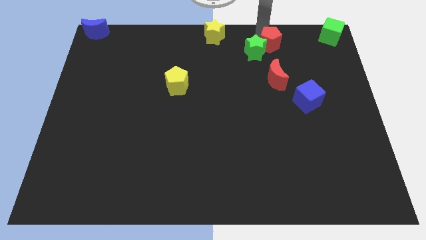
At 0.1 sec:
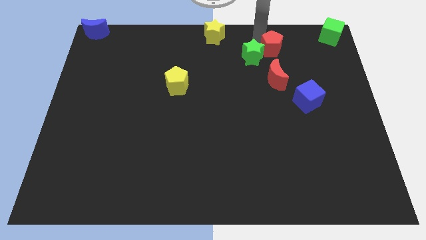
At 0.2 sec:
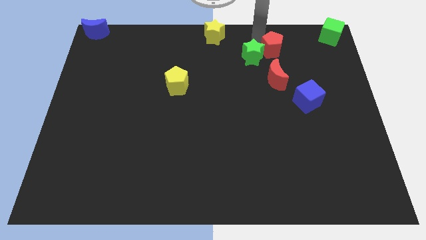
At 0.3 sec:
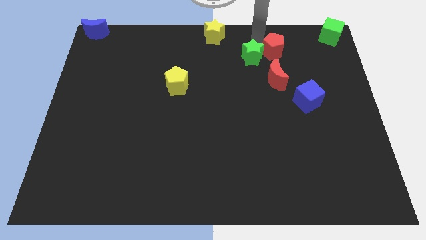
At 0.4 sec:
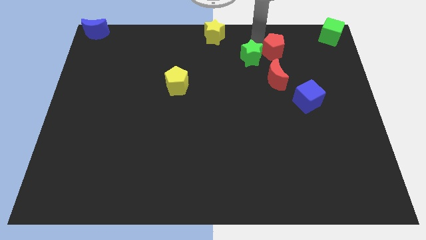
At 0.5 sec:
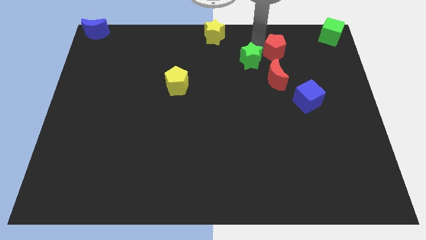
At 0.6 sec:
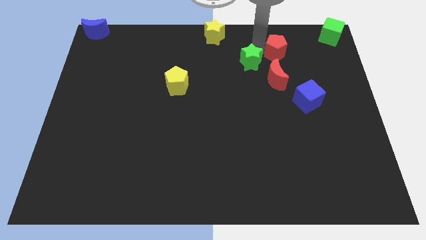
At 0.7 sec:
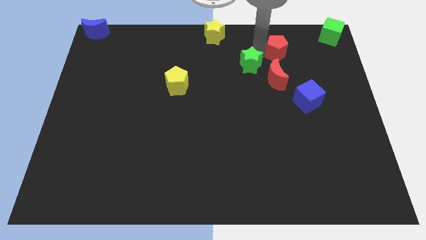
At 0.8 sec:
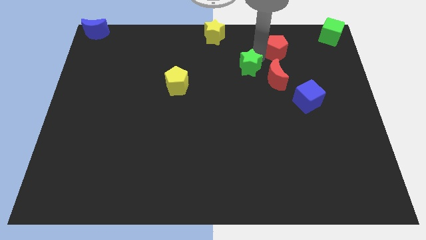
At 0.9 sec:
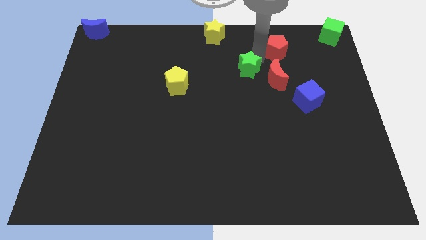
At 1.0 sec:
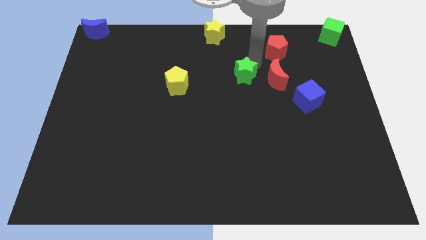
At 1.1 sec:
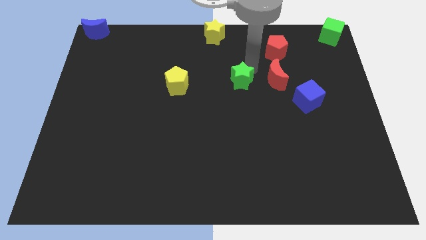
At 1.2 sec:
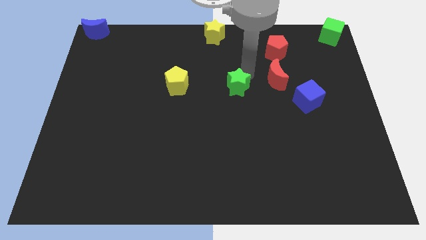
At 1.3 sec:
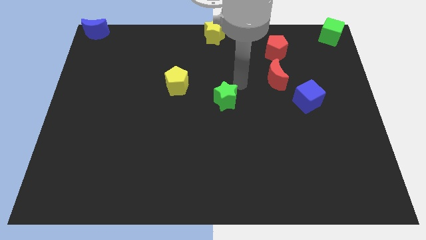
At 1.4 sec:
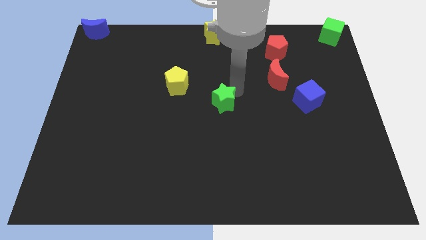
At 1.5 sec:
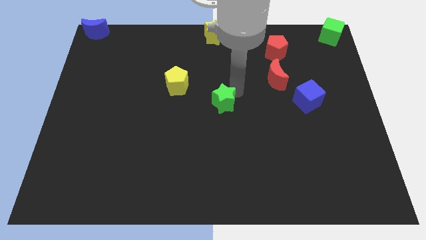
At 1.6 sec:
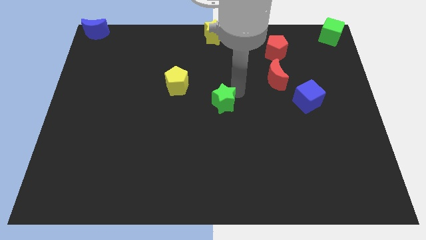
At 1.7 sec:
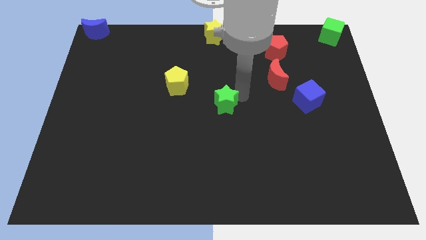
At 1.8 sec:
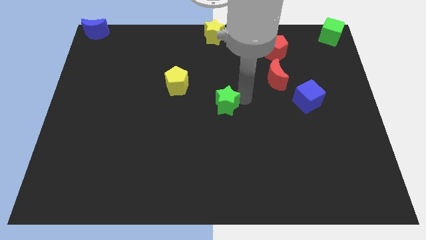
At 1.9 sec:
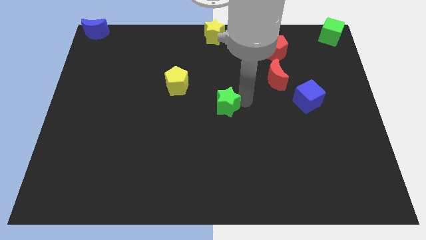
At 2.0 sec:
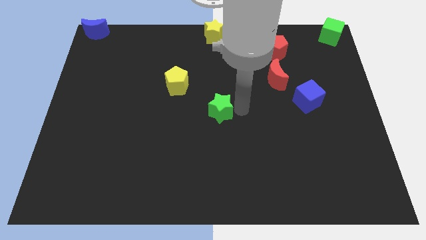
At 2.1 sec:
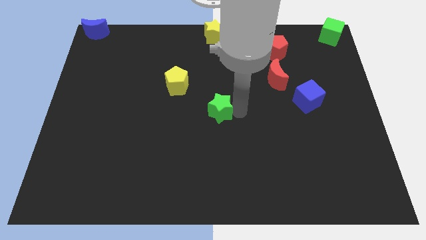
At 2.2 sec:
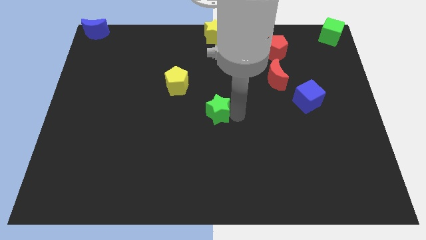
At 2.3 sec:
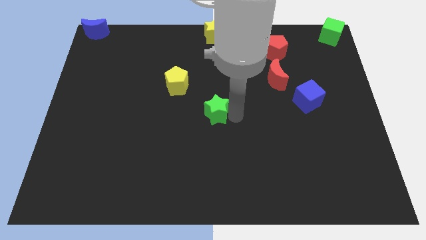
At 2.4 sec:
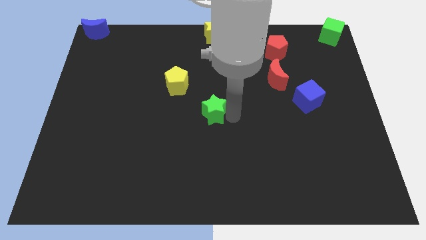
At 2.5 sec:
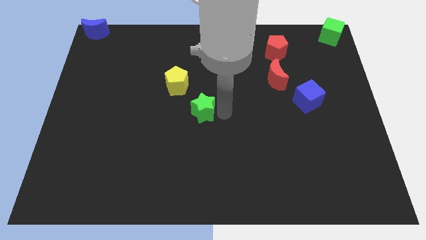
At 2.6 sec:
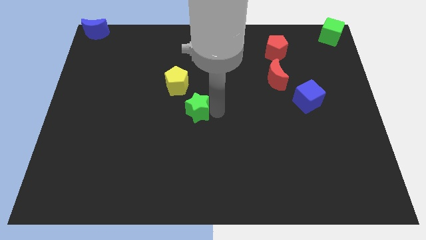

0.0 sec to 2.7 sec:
place the green star to the middle of the board

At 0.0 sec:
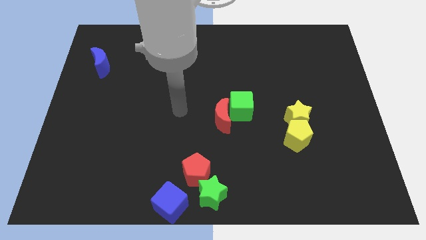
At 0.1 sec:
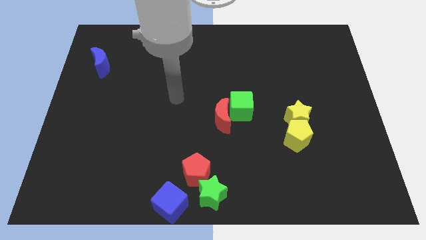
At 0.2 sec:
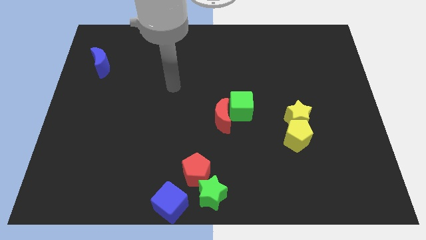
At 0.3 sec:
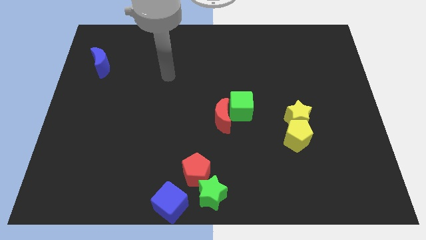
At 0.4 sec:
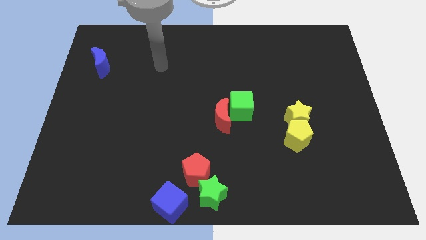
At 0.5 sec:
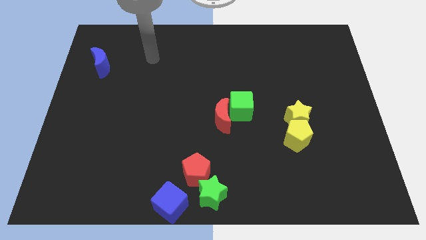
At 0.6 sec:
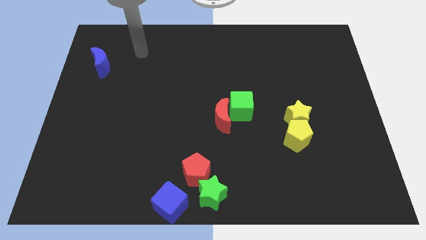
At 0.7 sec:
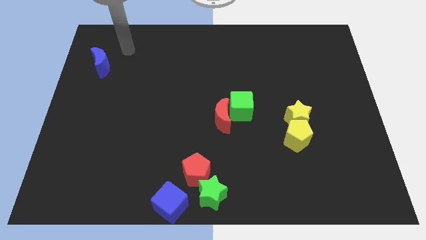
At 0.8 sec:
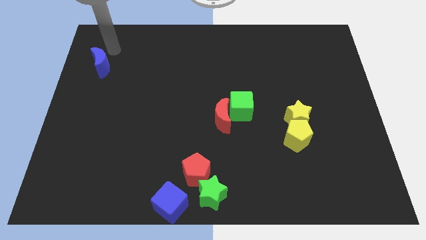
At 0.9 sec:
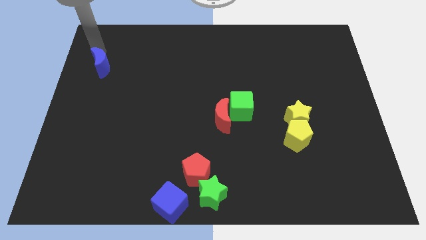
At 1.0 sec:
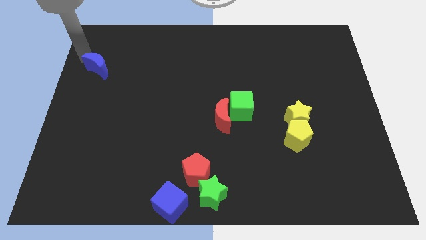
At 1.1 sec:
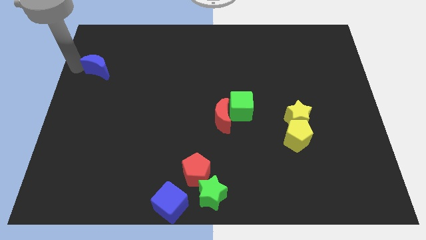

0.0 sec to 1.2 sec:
move your arm to the blue moon

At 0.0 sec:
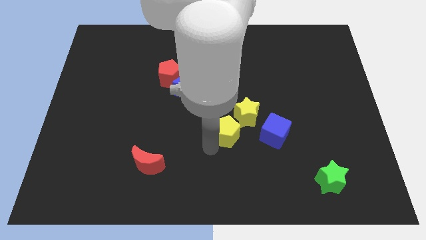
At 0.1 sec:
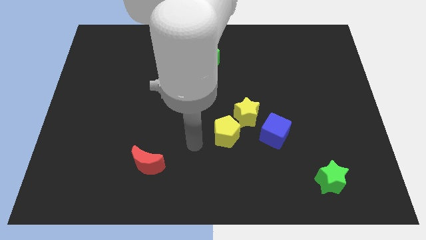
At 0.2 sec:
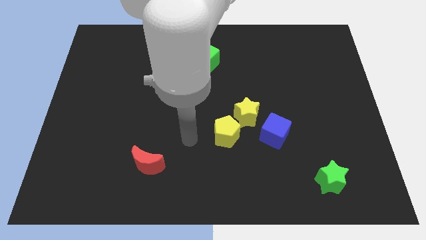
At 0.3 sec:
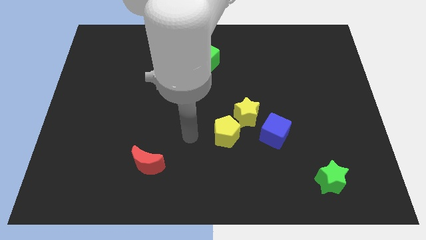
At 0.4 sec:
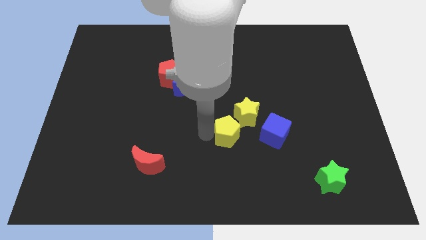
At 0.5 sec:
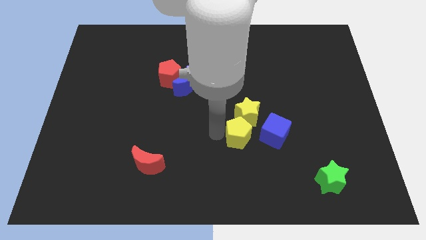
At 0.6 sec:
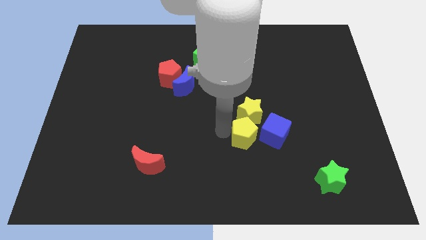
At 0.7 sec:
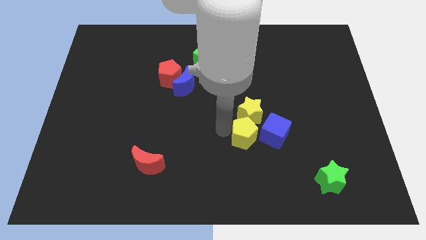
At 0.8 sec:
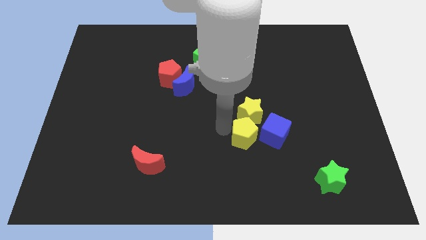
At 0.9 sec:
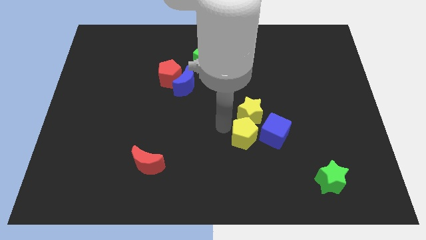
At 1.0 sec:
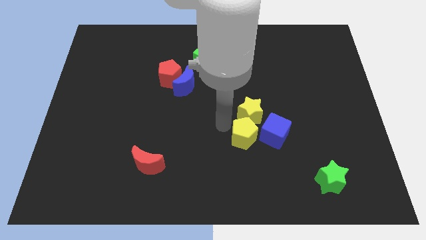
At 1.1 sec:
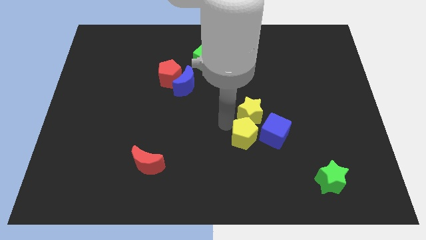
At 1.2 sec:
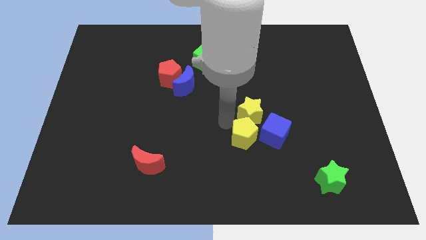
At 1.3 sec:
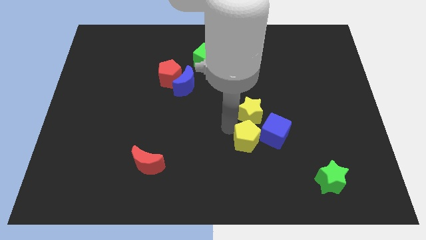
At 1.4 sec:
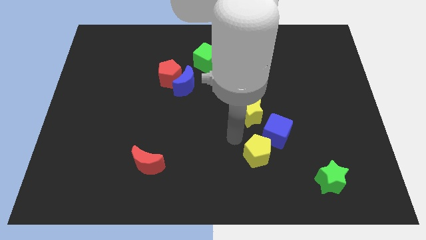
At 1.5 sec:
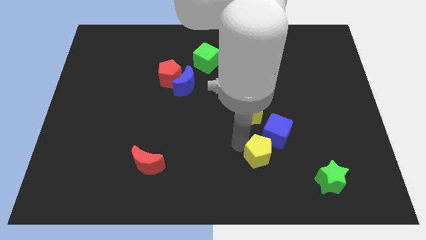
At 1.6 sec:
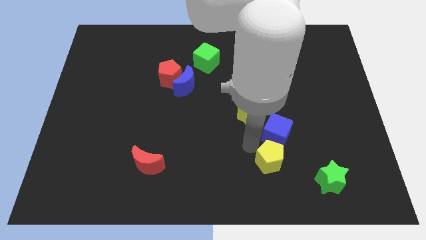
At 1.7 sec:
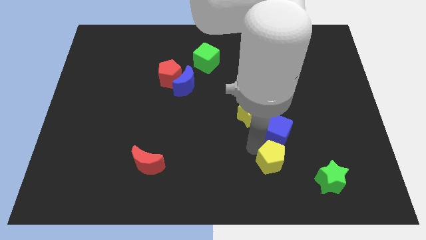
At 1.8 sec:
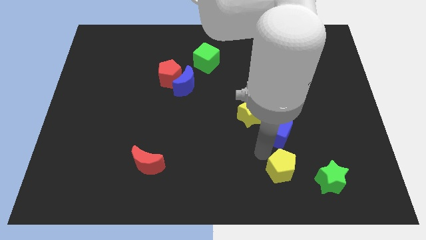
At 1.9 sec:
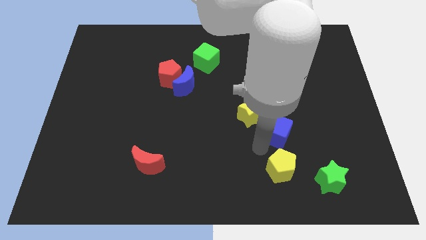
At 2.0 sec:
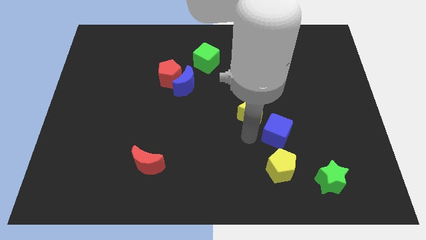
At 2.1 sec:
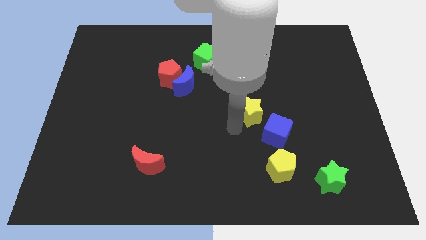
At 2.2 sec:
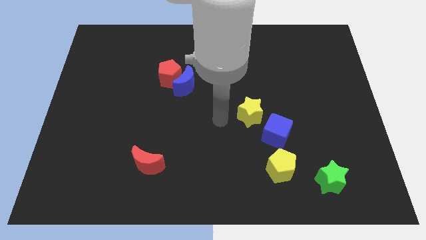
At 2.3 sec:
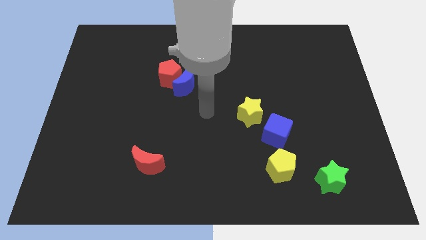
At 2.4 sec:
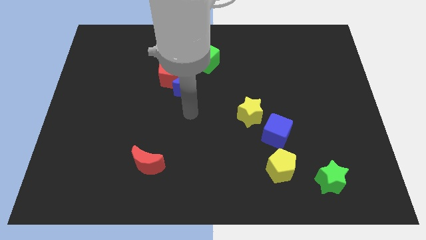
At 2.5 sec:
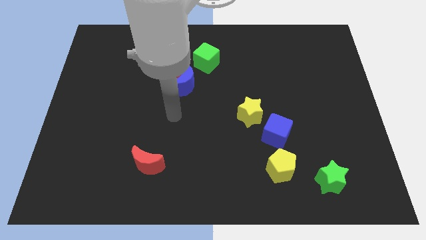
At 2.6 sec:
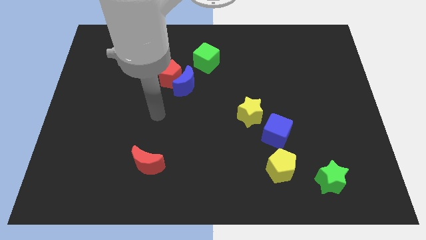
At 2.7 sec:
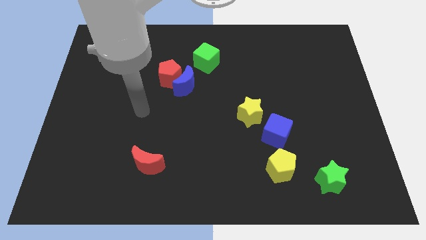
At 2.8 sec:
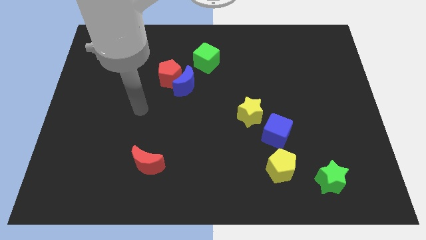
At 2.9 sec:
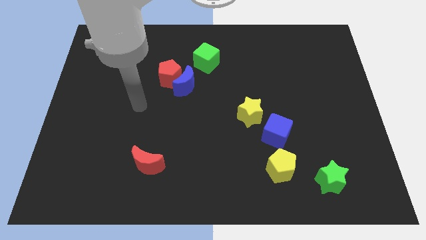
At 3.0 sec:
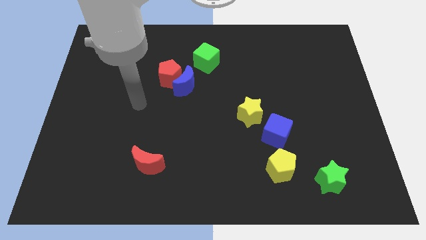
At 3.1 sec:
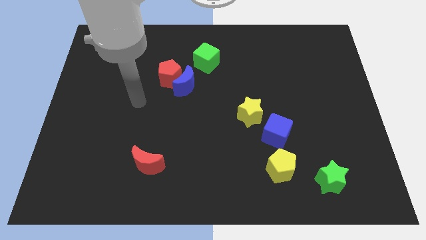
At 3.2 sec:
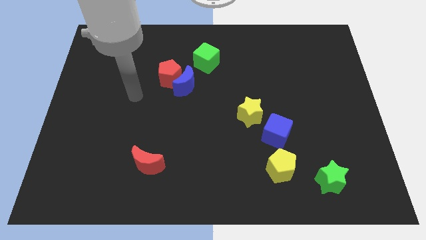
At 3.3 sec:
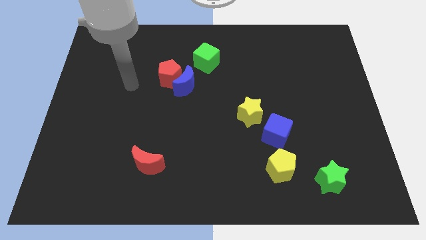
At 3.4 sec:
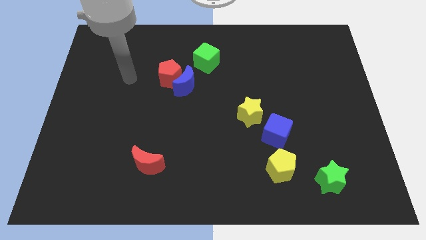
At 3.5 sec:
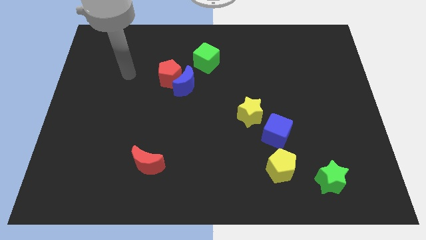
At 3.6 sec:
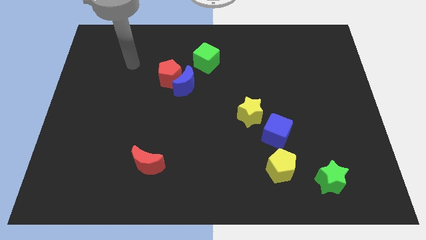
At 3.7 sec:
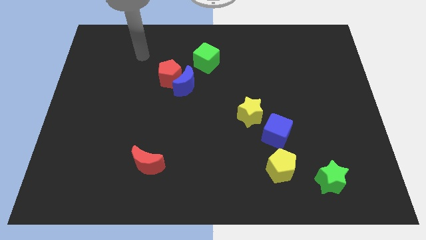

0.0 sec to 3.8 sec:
place the yellow pentagon in between the green star and red moon

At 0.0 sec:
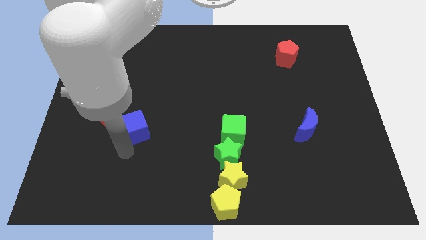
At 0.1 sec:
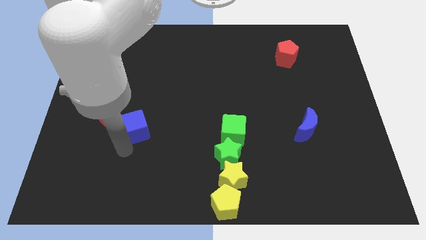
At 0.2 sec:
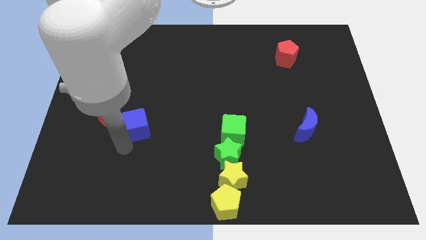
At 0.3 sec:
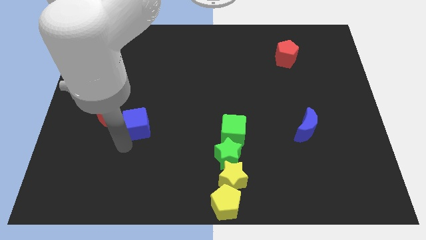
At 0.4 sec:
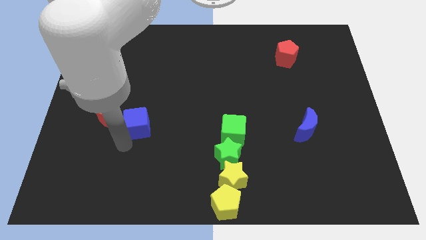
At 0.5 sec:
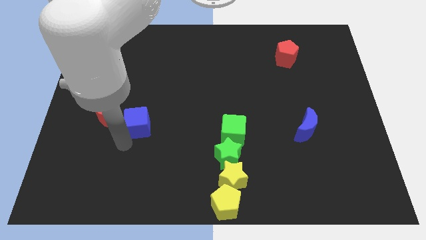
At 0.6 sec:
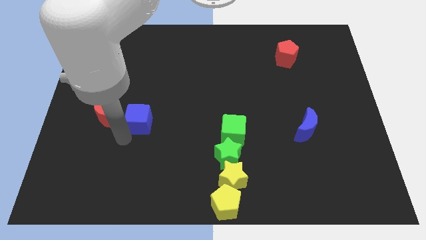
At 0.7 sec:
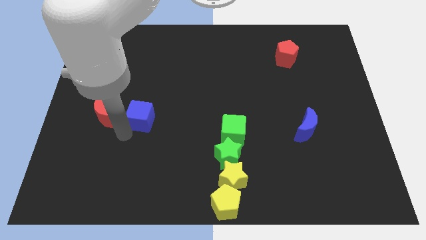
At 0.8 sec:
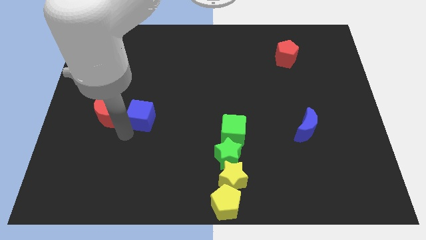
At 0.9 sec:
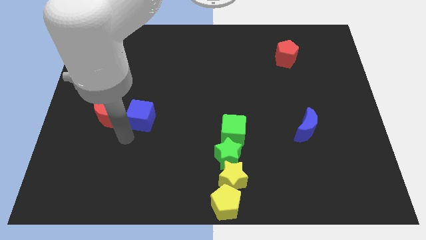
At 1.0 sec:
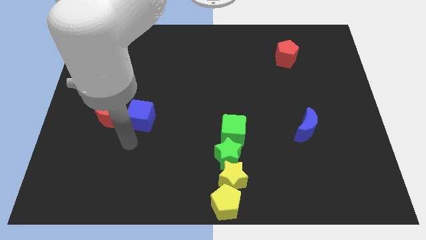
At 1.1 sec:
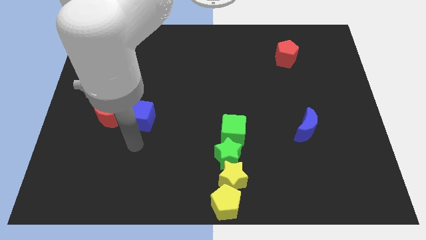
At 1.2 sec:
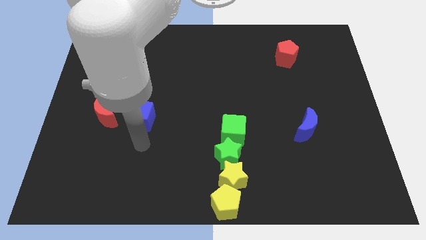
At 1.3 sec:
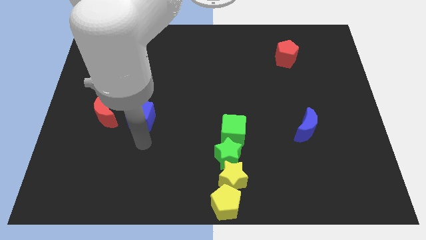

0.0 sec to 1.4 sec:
put the blue cube to the right of the red moon
